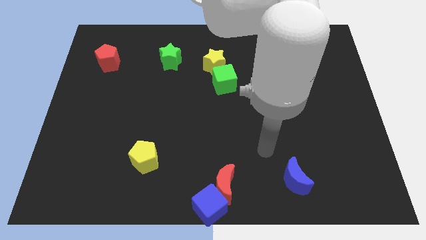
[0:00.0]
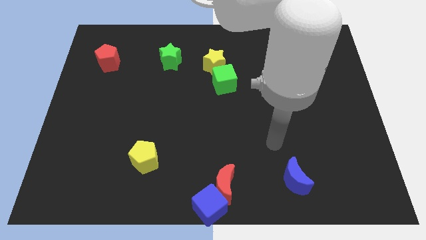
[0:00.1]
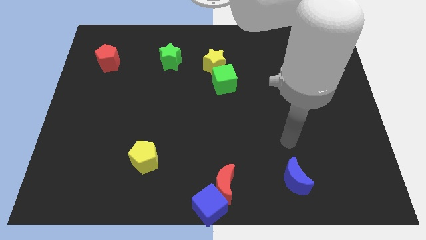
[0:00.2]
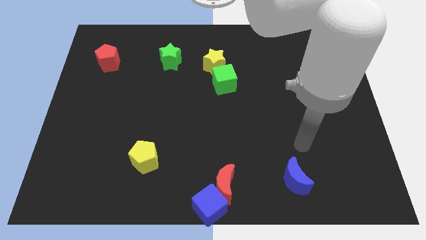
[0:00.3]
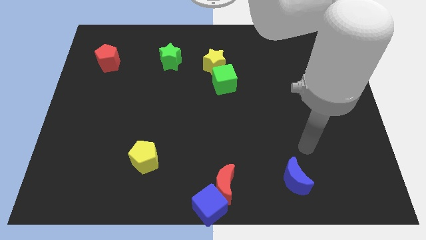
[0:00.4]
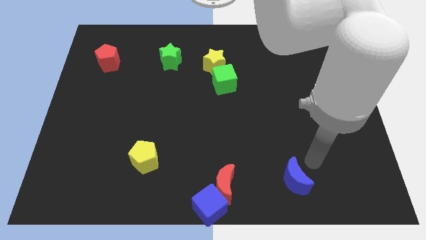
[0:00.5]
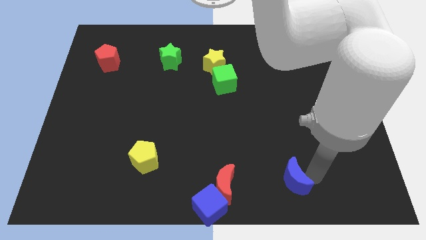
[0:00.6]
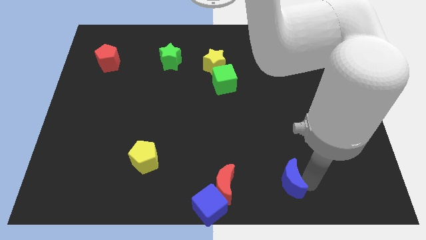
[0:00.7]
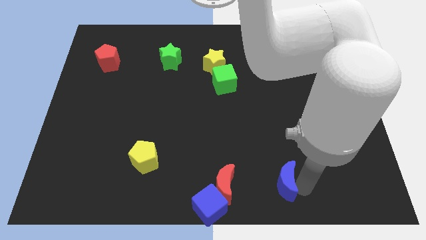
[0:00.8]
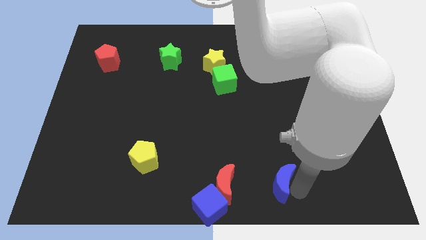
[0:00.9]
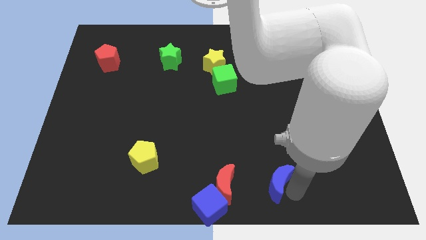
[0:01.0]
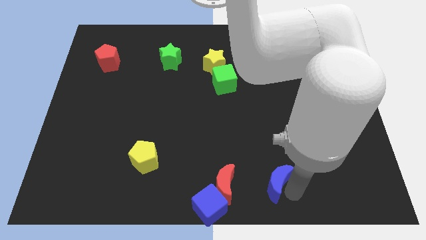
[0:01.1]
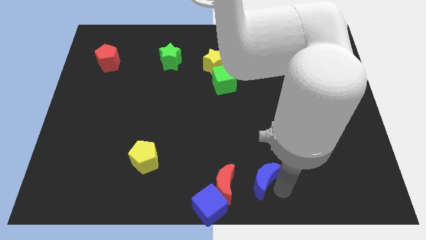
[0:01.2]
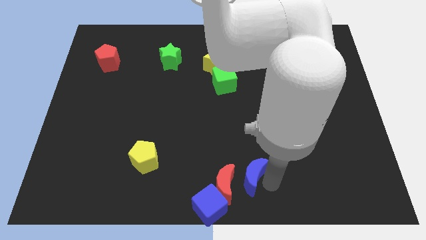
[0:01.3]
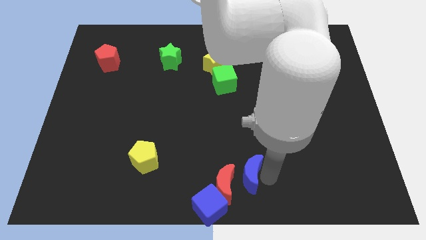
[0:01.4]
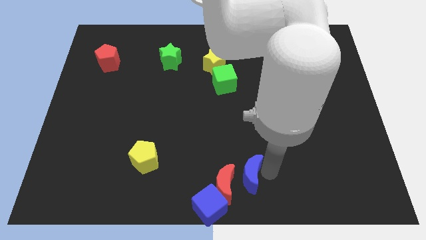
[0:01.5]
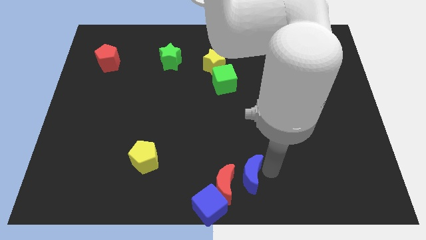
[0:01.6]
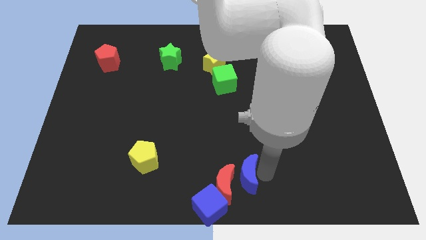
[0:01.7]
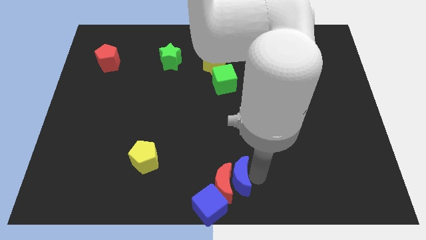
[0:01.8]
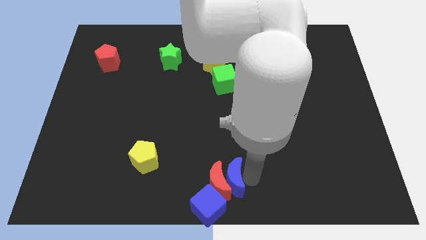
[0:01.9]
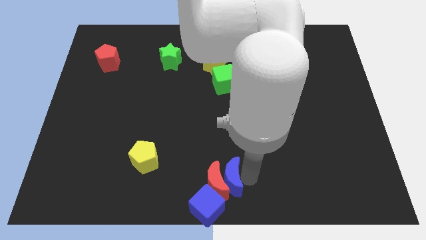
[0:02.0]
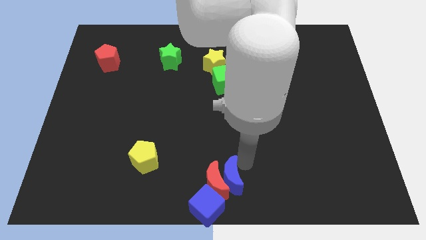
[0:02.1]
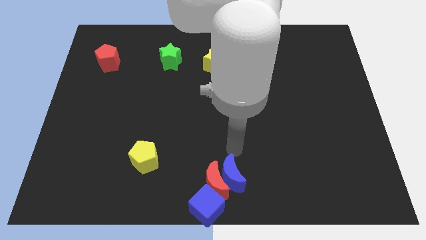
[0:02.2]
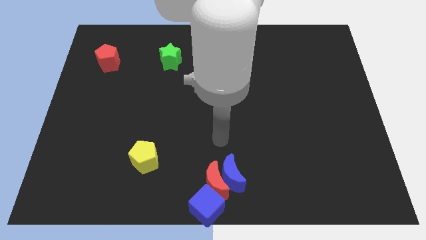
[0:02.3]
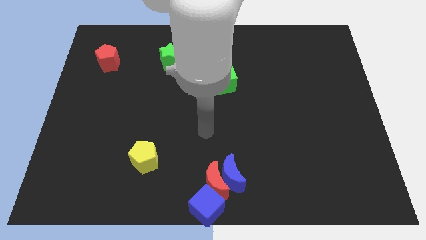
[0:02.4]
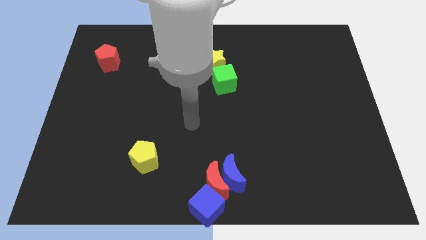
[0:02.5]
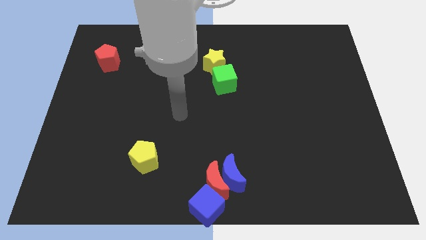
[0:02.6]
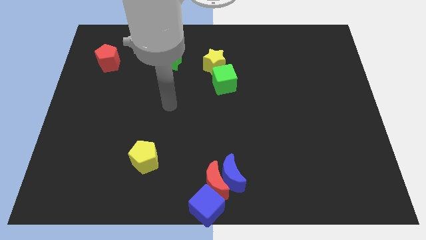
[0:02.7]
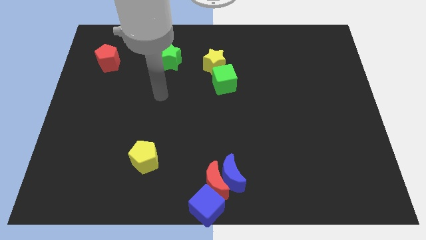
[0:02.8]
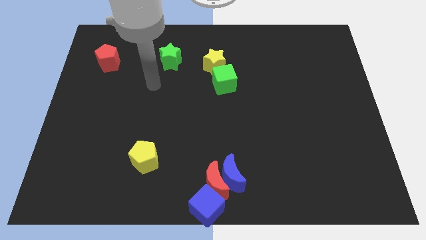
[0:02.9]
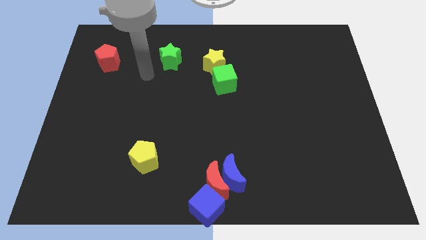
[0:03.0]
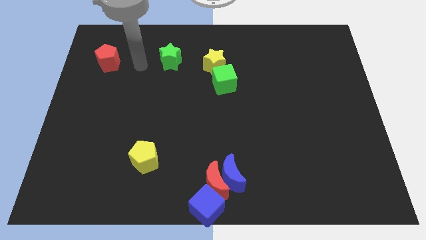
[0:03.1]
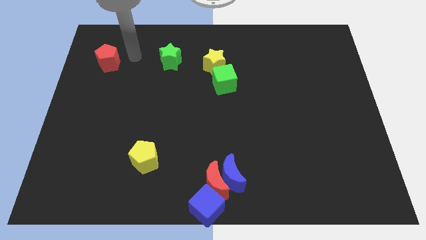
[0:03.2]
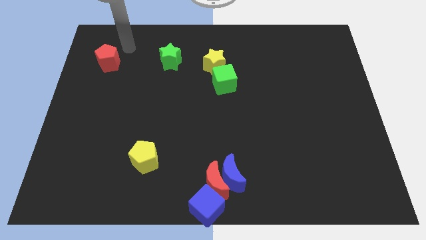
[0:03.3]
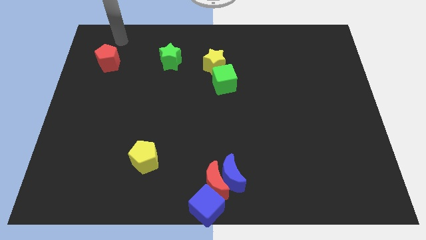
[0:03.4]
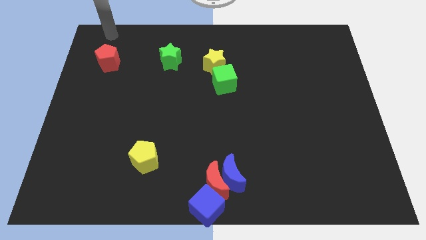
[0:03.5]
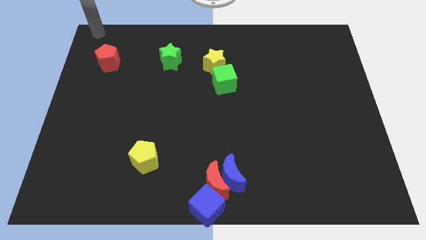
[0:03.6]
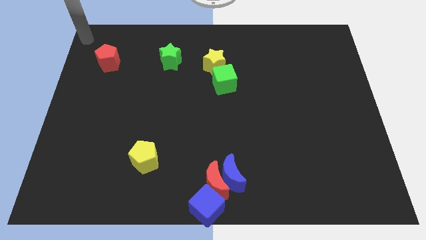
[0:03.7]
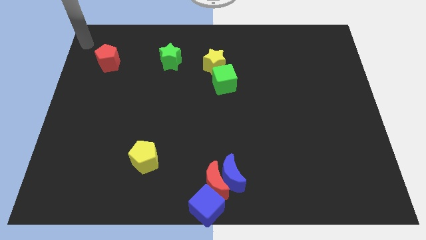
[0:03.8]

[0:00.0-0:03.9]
push blue crescent in to red moon

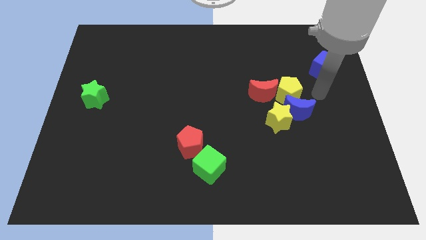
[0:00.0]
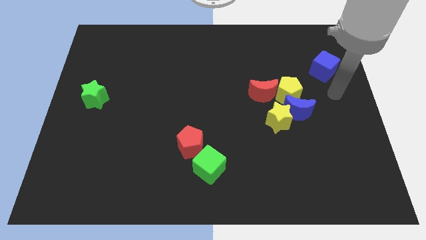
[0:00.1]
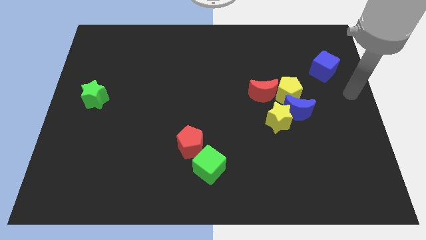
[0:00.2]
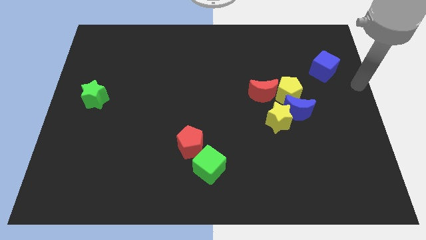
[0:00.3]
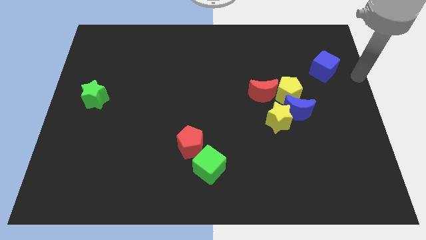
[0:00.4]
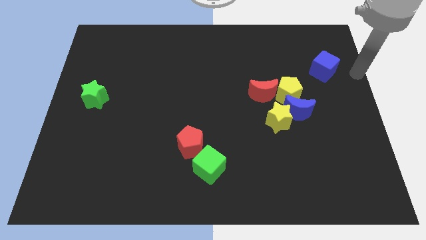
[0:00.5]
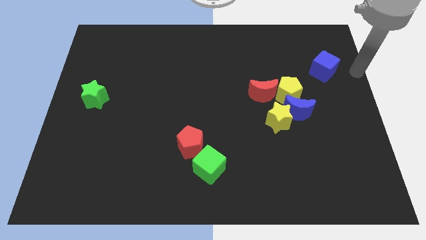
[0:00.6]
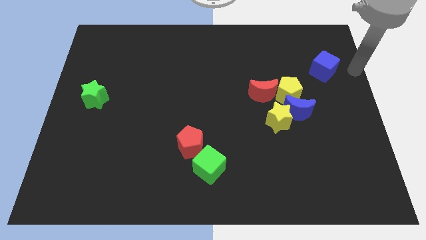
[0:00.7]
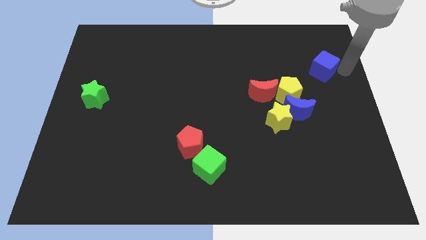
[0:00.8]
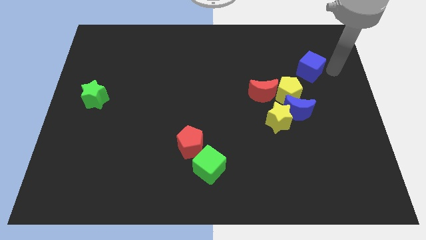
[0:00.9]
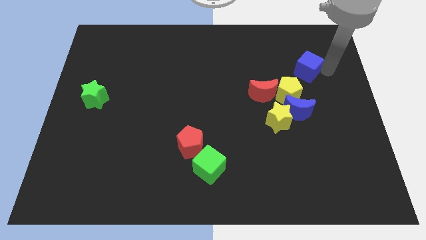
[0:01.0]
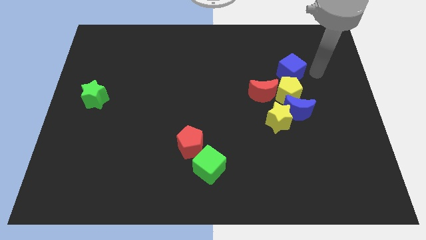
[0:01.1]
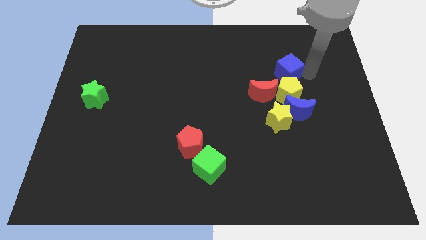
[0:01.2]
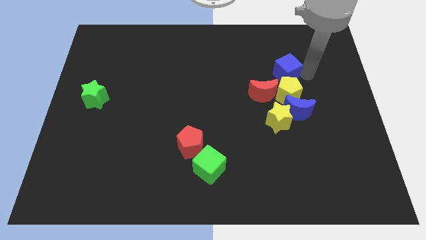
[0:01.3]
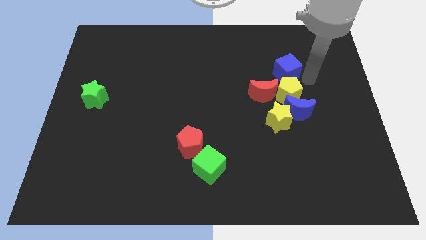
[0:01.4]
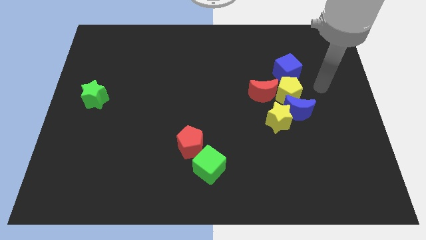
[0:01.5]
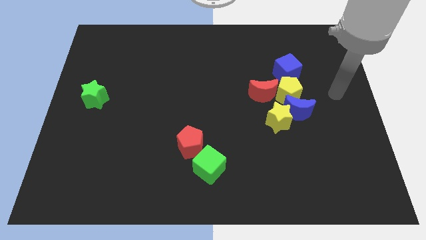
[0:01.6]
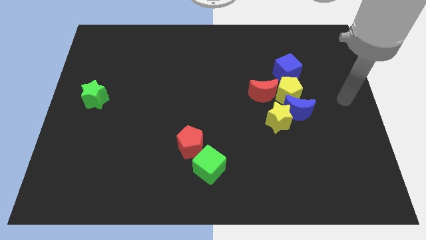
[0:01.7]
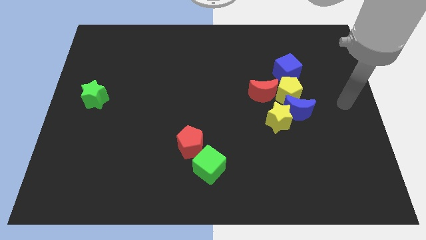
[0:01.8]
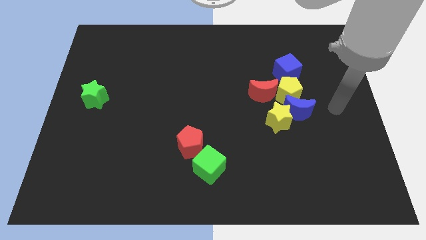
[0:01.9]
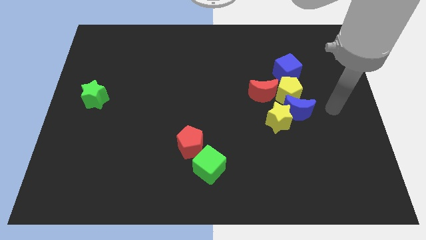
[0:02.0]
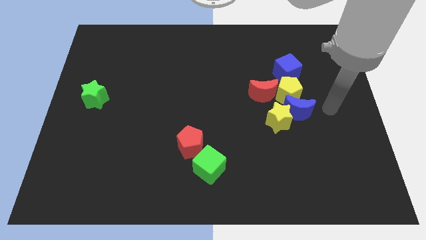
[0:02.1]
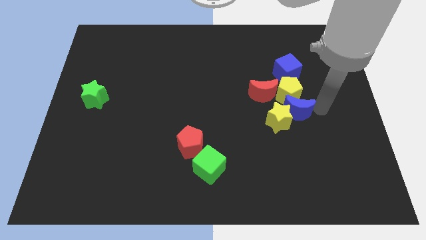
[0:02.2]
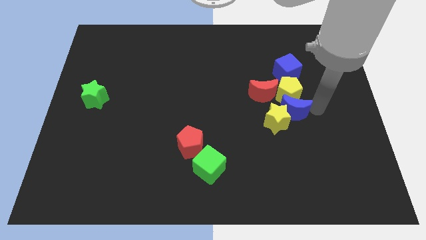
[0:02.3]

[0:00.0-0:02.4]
move the blue cube above the yellow pentagon

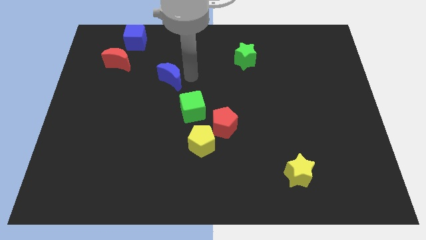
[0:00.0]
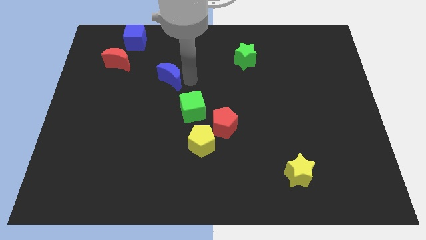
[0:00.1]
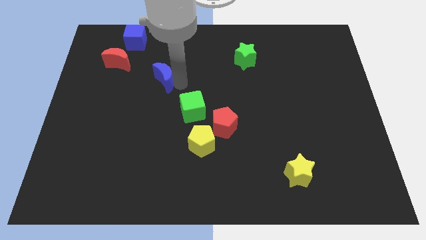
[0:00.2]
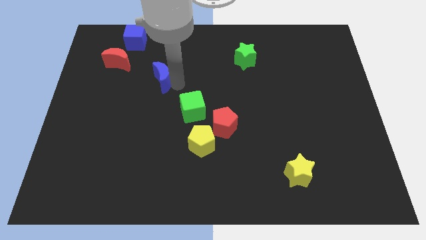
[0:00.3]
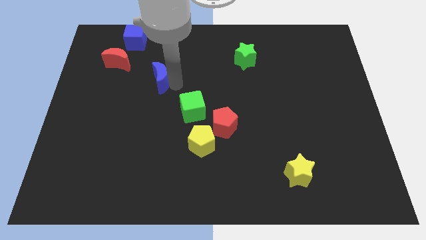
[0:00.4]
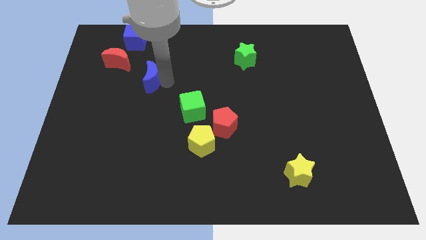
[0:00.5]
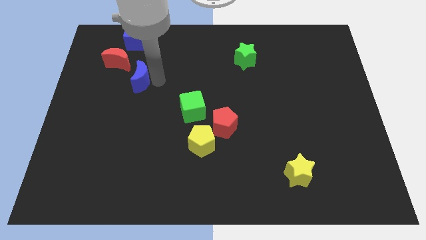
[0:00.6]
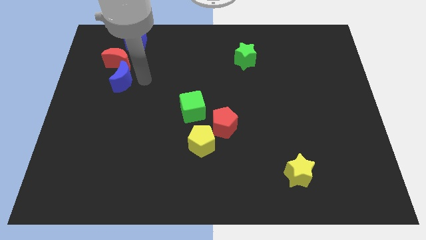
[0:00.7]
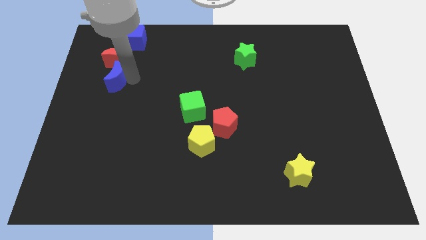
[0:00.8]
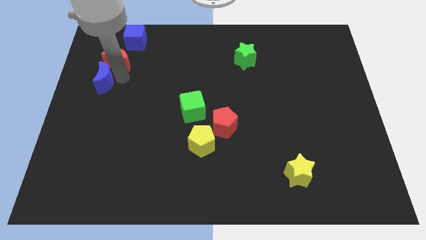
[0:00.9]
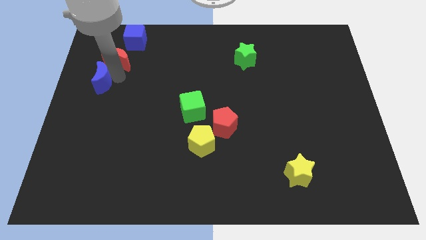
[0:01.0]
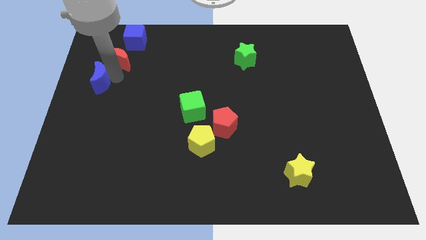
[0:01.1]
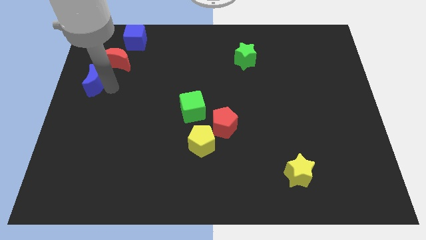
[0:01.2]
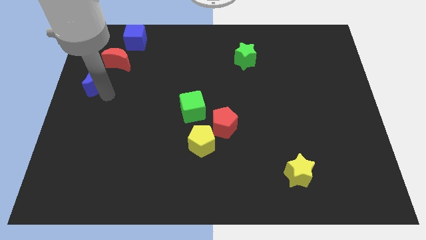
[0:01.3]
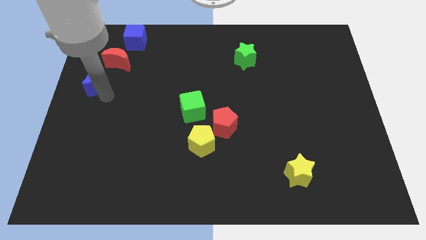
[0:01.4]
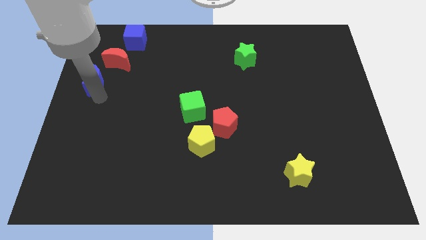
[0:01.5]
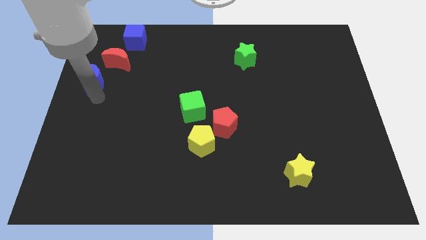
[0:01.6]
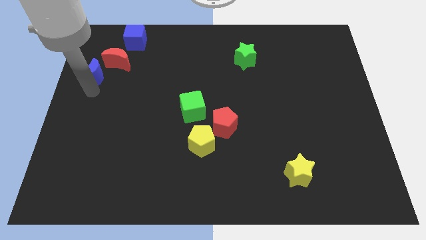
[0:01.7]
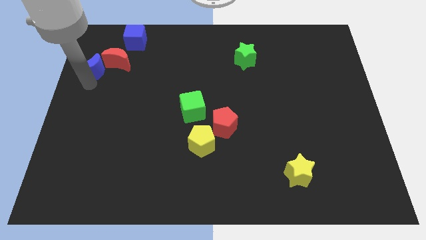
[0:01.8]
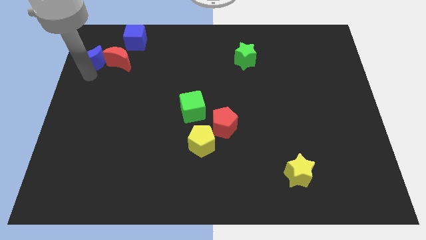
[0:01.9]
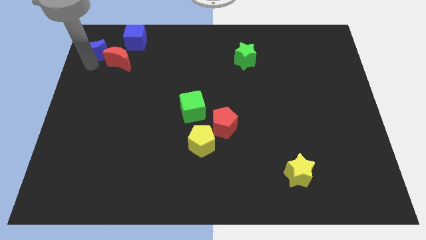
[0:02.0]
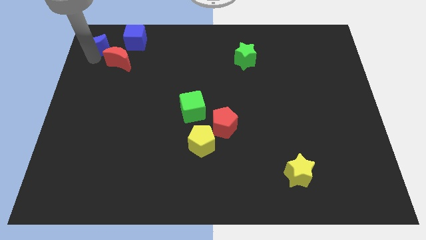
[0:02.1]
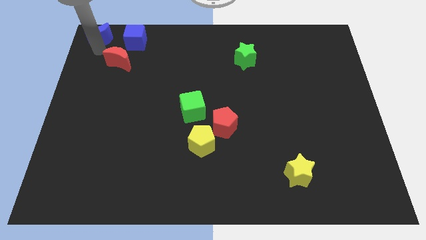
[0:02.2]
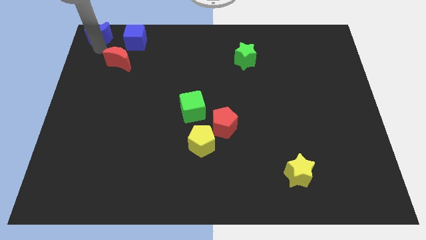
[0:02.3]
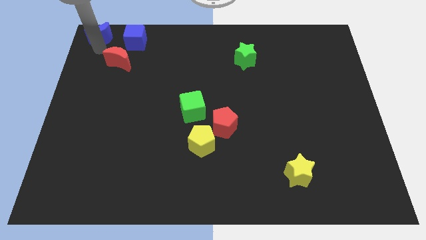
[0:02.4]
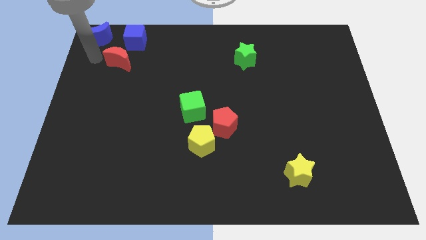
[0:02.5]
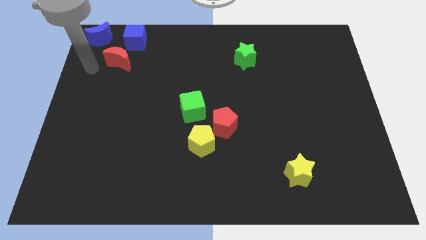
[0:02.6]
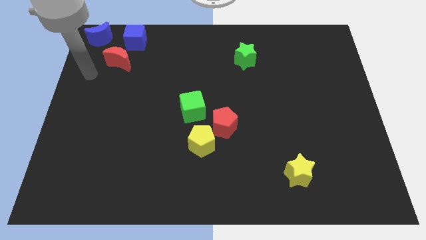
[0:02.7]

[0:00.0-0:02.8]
place blue crescent on the top left corner of the board
